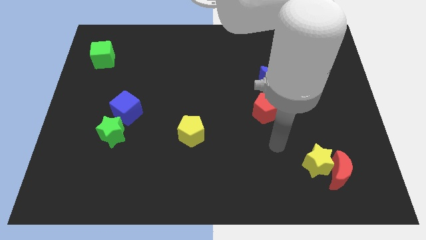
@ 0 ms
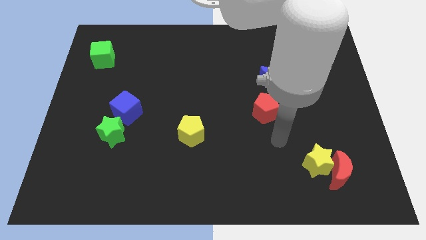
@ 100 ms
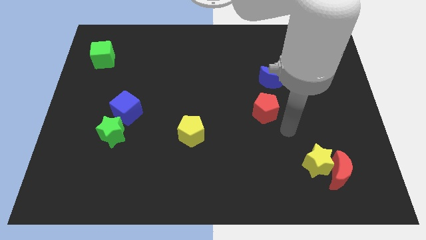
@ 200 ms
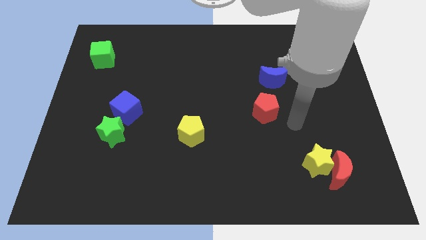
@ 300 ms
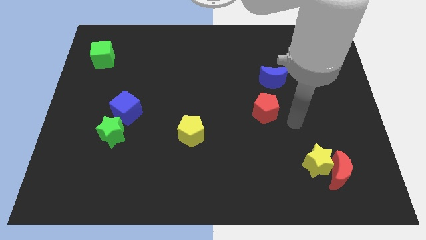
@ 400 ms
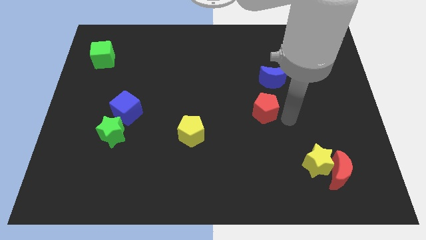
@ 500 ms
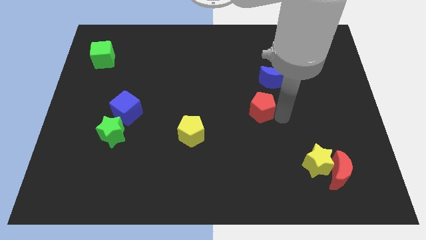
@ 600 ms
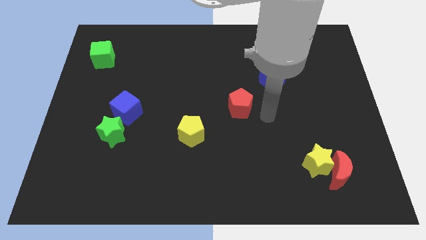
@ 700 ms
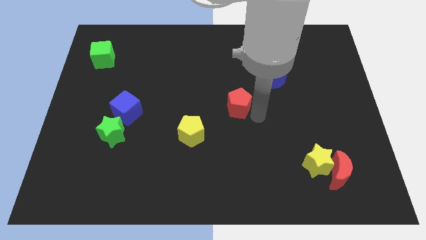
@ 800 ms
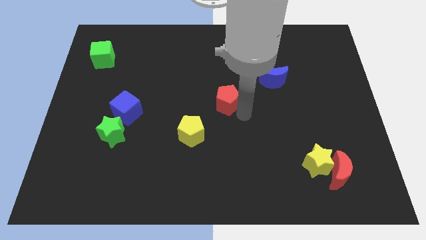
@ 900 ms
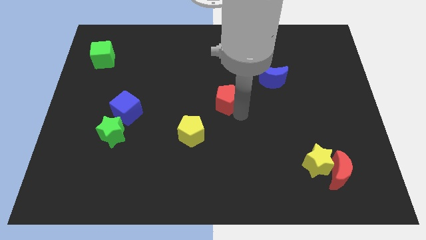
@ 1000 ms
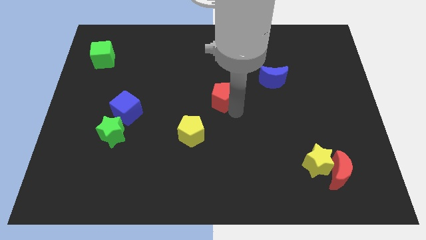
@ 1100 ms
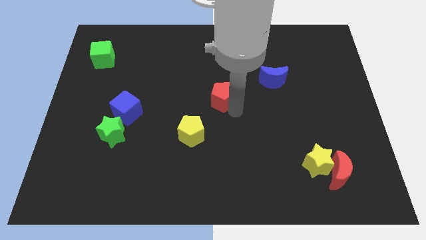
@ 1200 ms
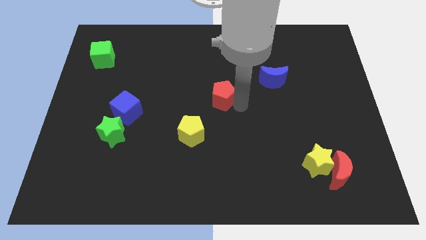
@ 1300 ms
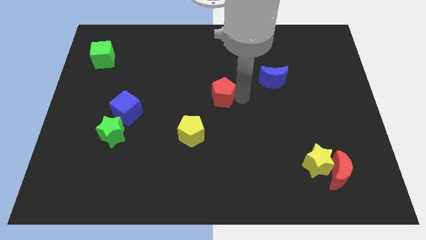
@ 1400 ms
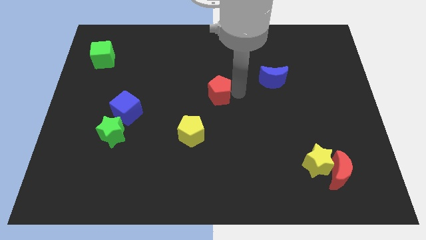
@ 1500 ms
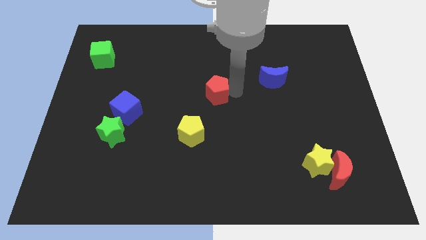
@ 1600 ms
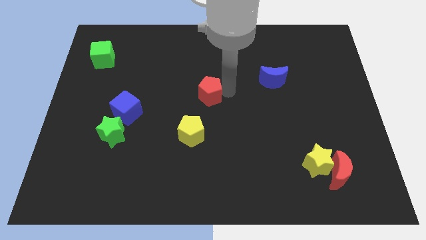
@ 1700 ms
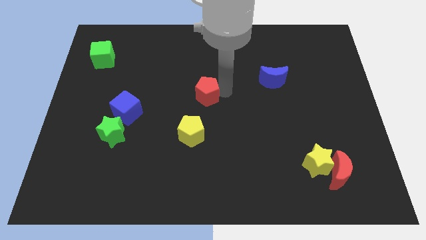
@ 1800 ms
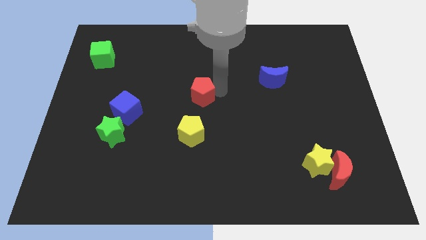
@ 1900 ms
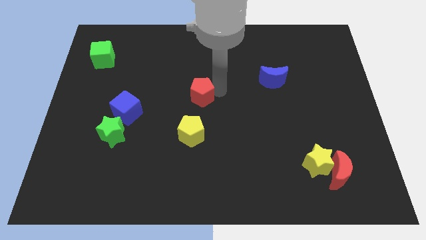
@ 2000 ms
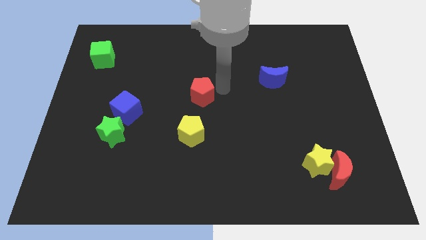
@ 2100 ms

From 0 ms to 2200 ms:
move the red pentagon above the yellow pentagon

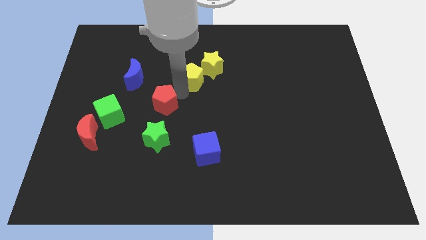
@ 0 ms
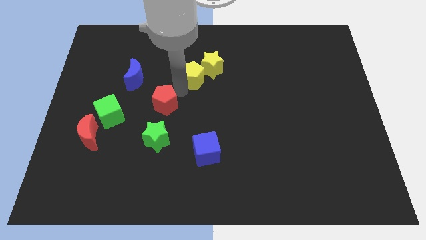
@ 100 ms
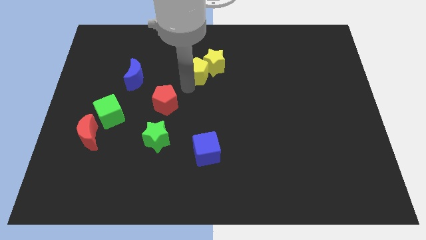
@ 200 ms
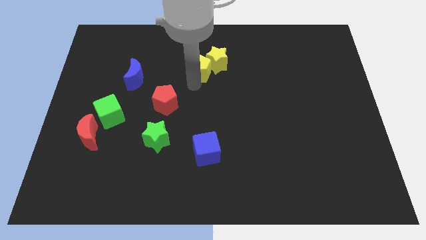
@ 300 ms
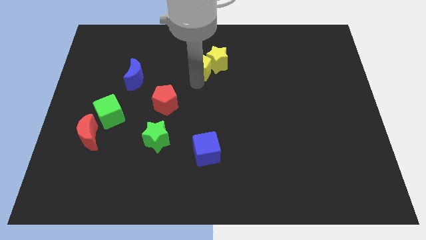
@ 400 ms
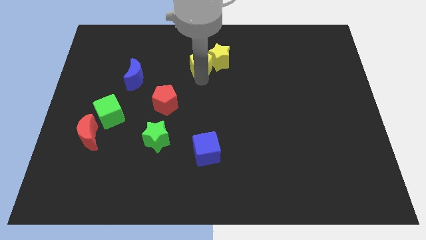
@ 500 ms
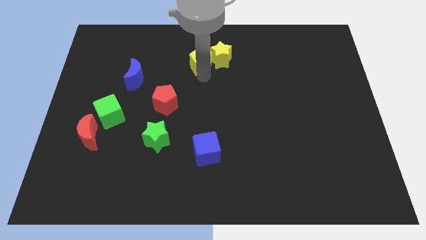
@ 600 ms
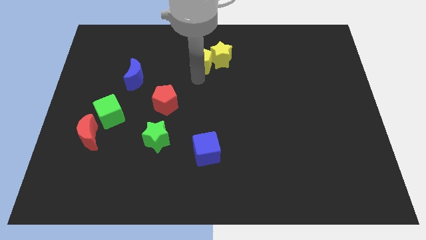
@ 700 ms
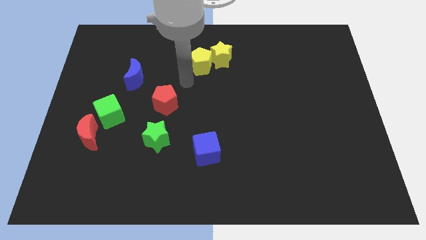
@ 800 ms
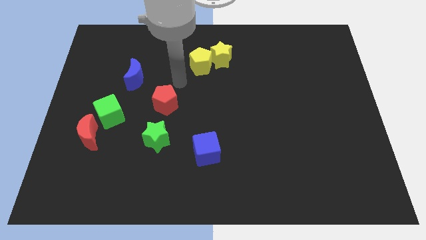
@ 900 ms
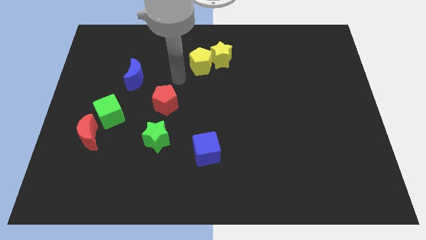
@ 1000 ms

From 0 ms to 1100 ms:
push the yellow pentagon into the yellow star

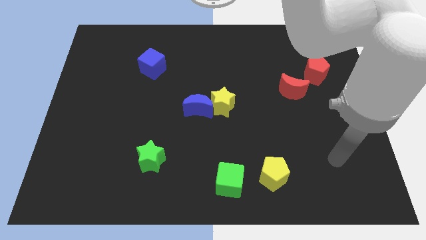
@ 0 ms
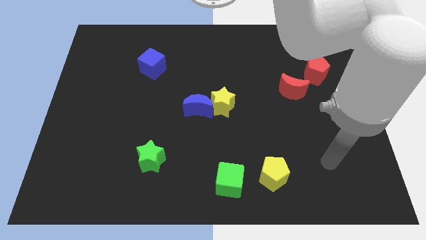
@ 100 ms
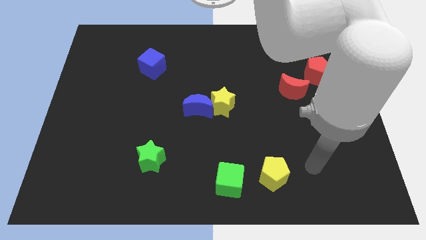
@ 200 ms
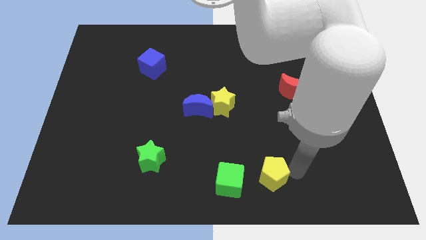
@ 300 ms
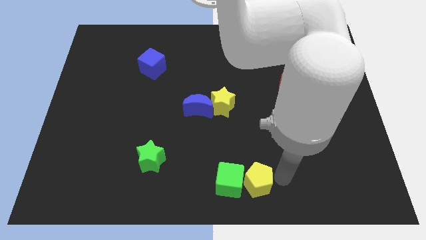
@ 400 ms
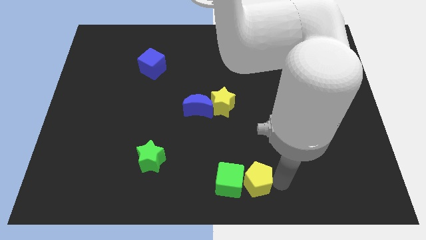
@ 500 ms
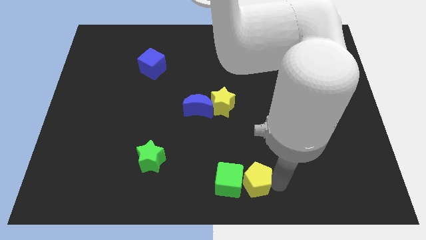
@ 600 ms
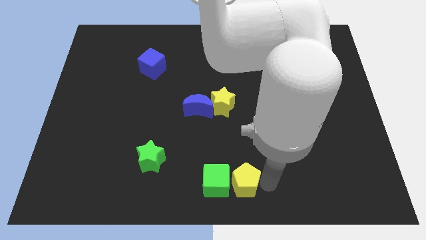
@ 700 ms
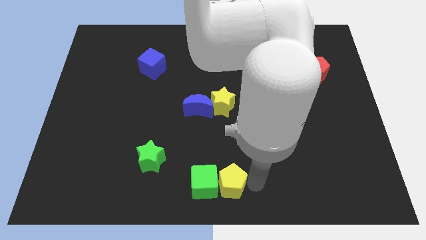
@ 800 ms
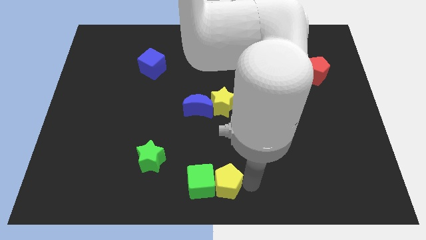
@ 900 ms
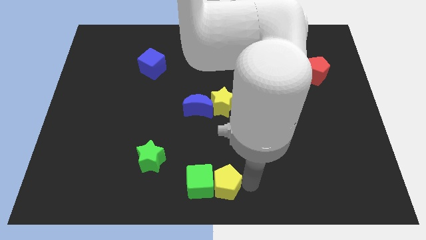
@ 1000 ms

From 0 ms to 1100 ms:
push the green cube with the yellow pentagon

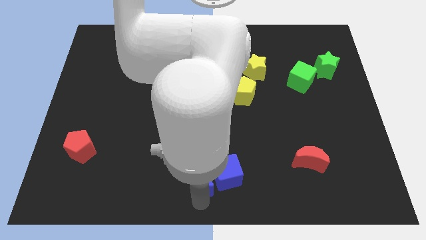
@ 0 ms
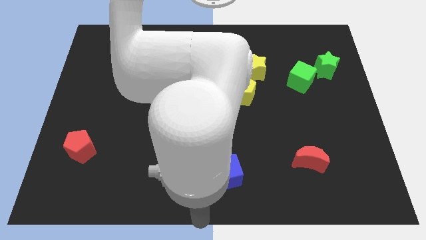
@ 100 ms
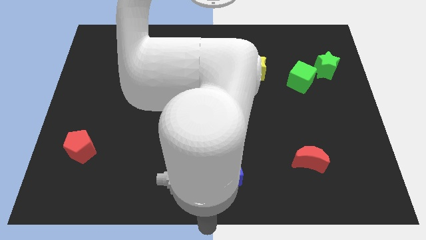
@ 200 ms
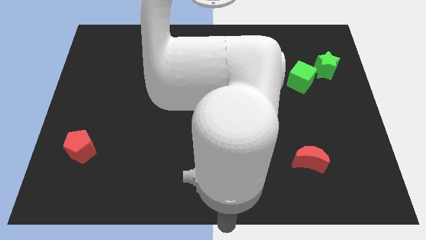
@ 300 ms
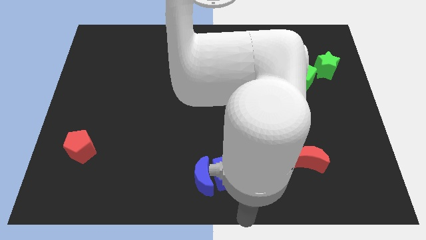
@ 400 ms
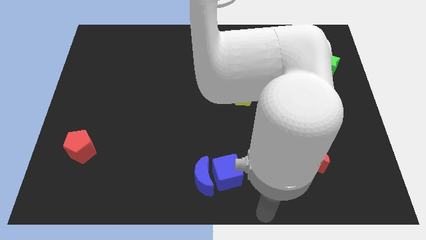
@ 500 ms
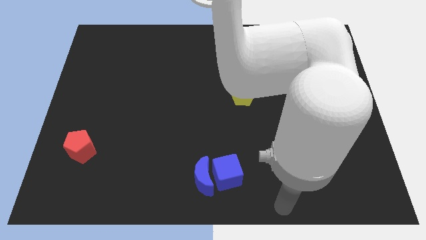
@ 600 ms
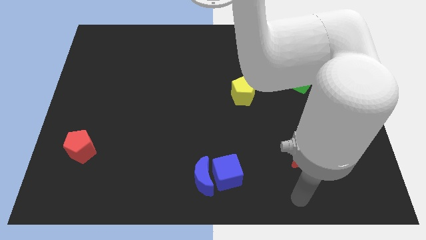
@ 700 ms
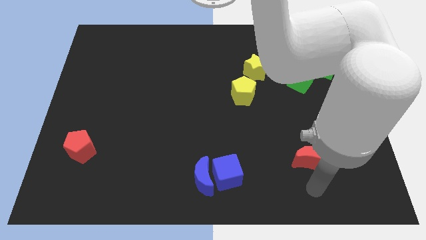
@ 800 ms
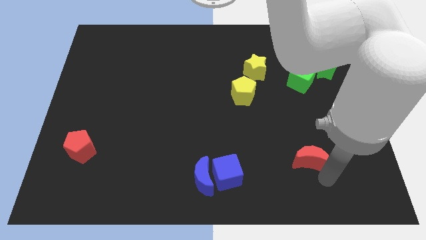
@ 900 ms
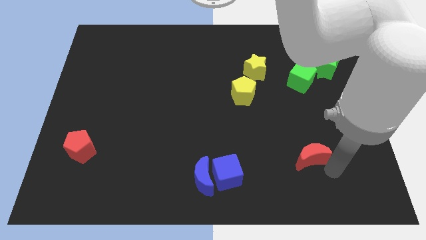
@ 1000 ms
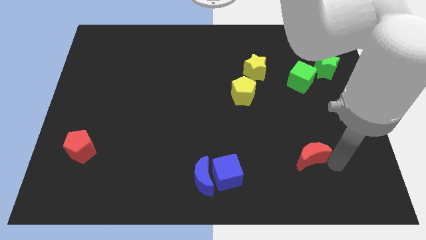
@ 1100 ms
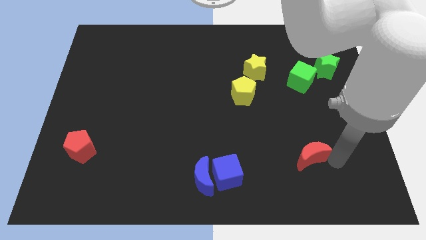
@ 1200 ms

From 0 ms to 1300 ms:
go near red moon

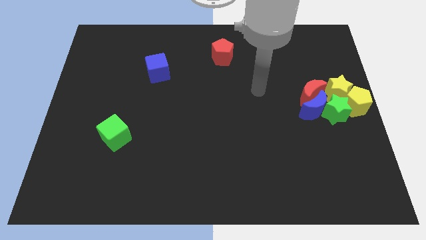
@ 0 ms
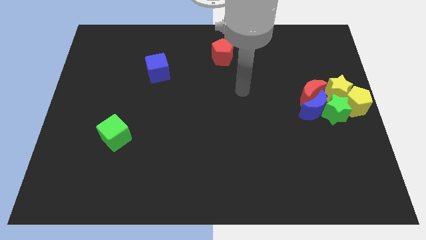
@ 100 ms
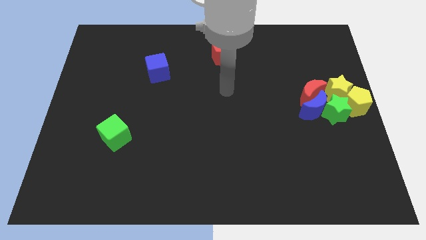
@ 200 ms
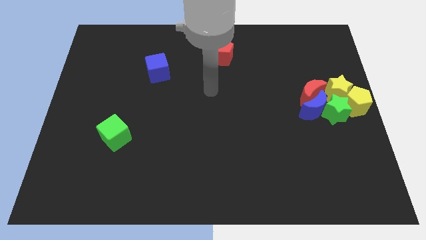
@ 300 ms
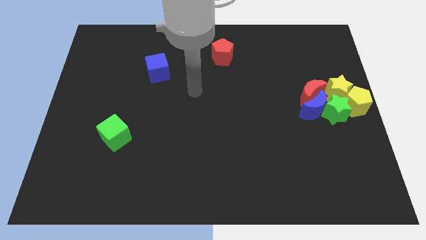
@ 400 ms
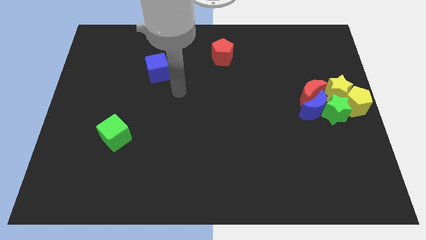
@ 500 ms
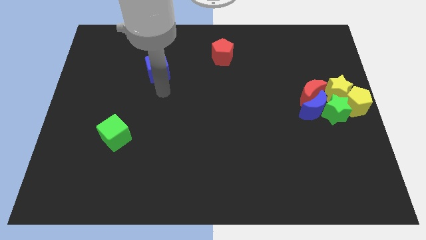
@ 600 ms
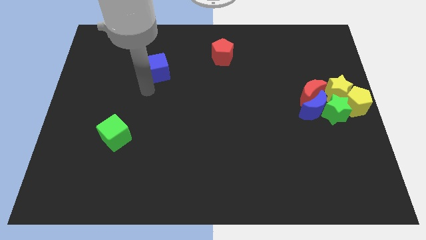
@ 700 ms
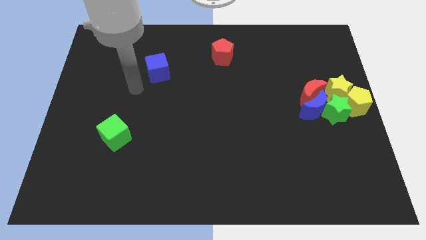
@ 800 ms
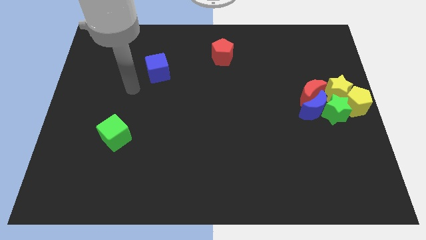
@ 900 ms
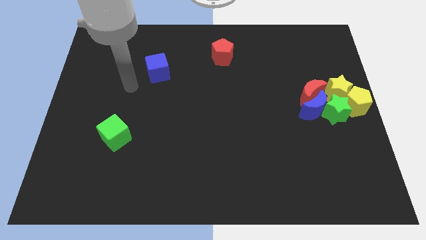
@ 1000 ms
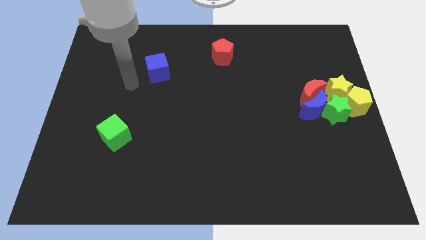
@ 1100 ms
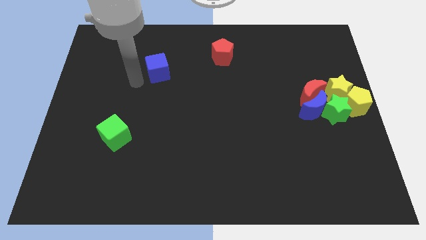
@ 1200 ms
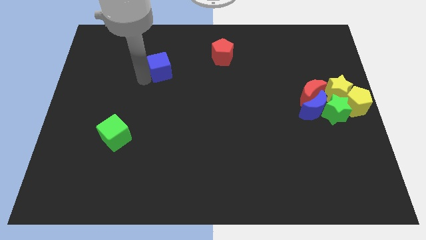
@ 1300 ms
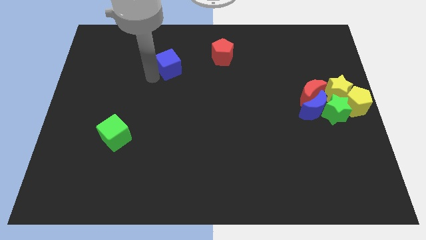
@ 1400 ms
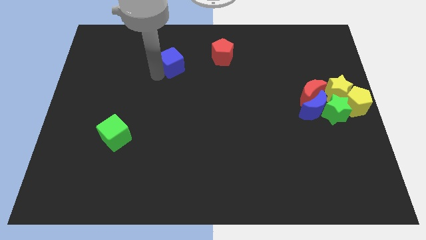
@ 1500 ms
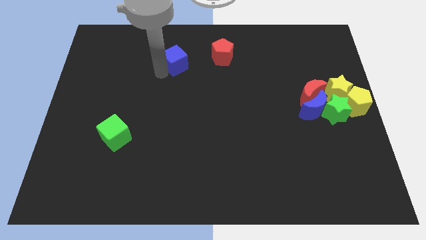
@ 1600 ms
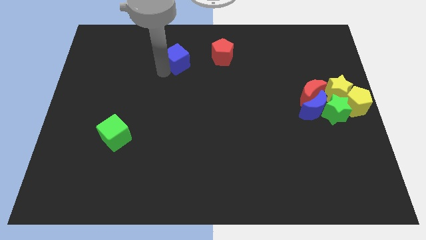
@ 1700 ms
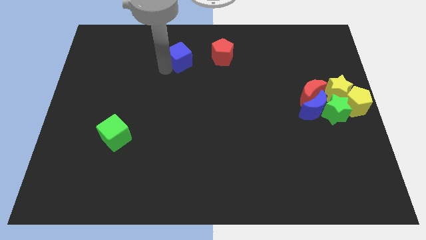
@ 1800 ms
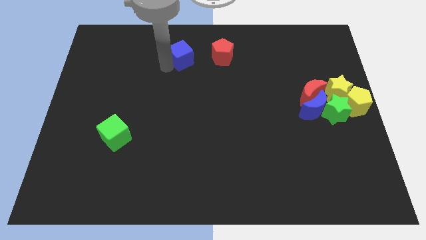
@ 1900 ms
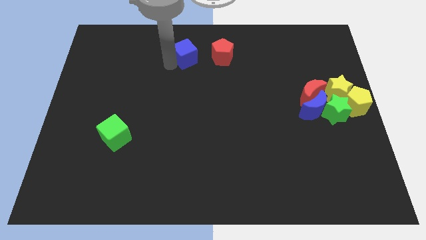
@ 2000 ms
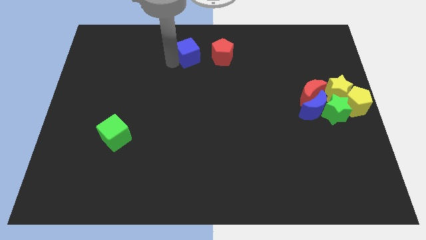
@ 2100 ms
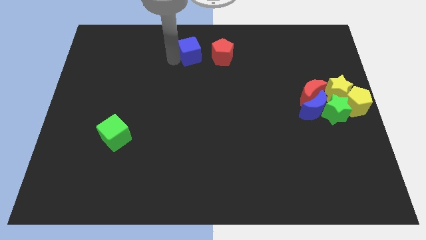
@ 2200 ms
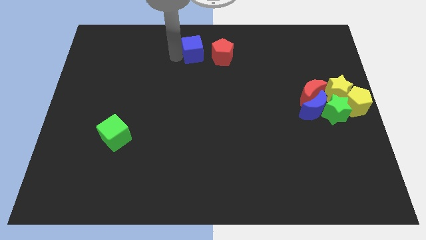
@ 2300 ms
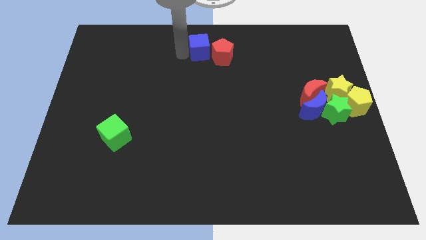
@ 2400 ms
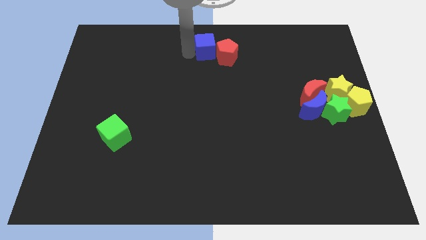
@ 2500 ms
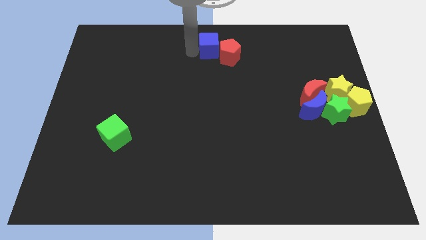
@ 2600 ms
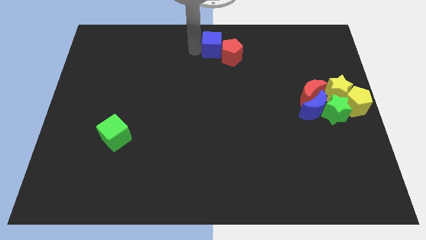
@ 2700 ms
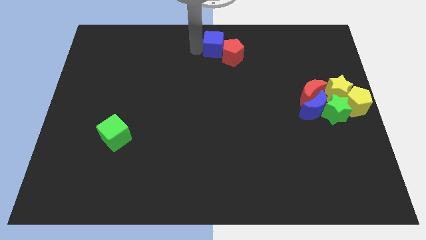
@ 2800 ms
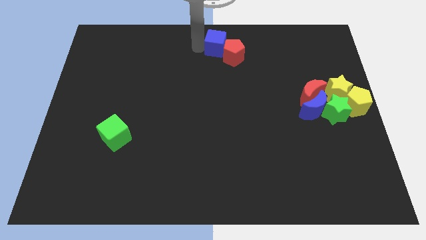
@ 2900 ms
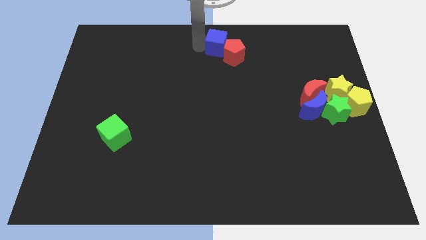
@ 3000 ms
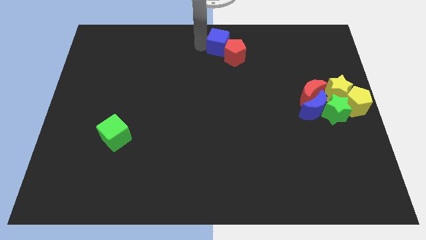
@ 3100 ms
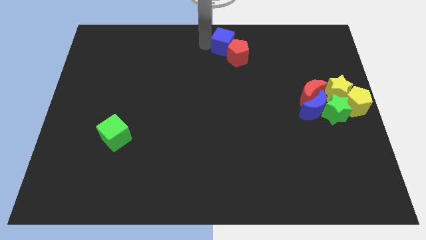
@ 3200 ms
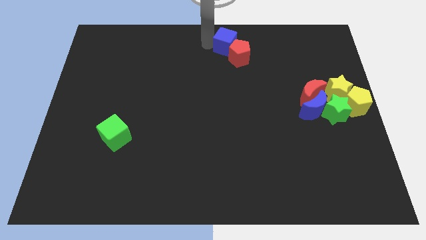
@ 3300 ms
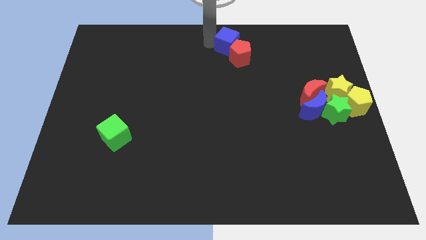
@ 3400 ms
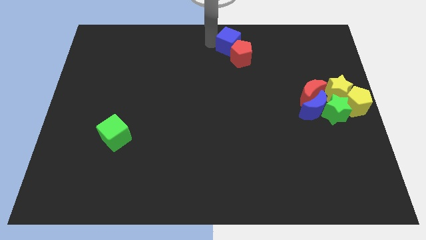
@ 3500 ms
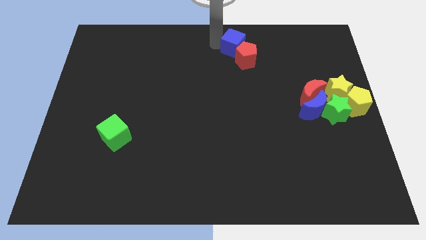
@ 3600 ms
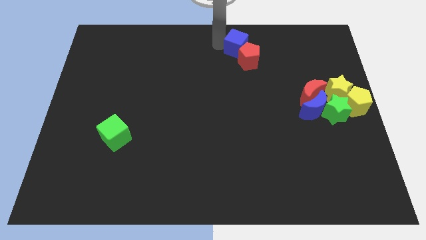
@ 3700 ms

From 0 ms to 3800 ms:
push the blue cube into the red pentagon towards the right of the board
